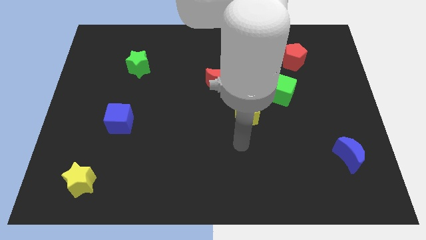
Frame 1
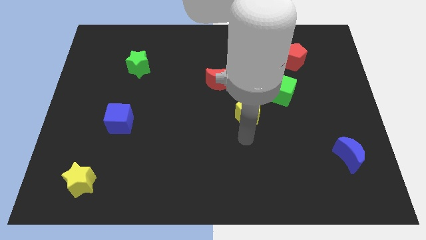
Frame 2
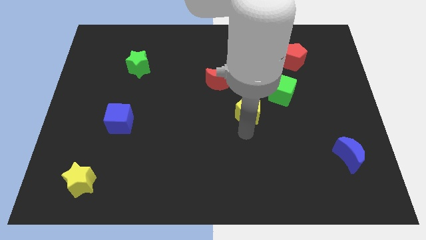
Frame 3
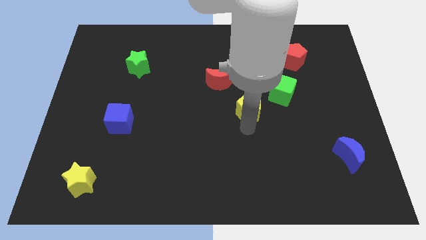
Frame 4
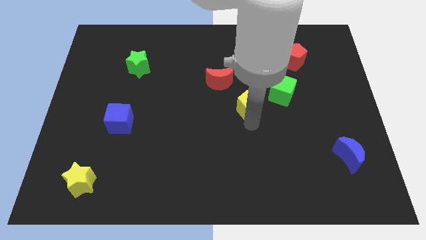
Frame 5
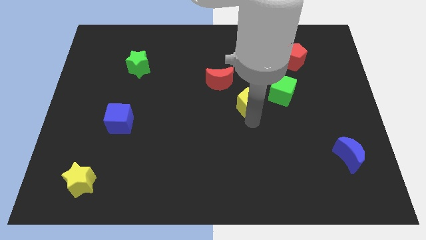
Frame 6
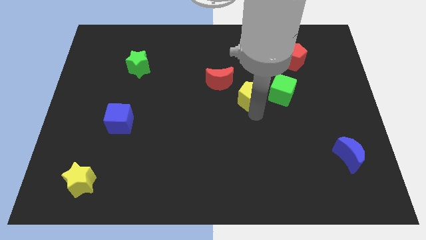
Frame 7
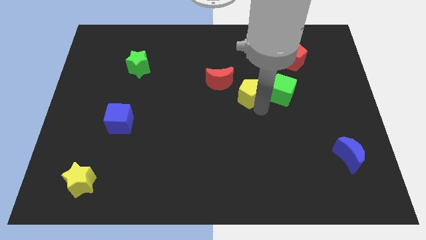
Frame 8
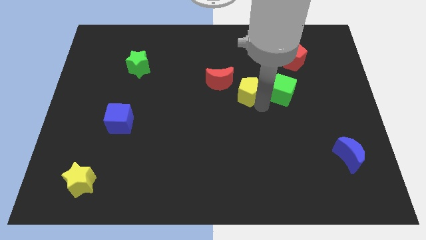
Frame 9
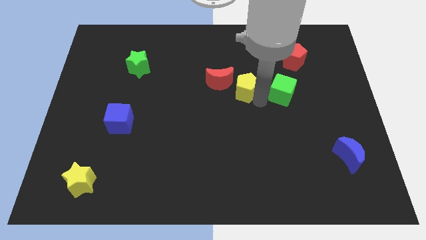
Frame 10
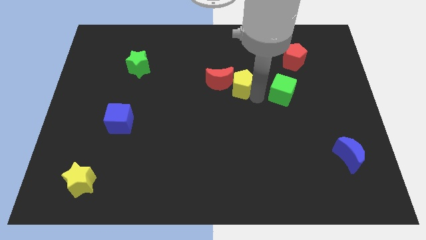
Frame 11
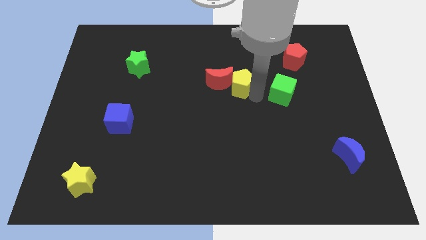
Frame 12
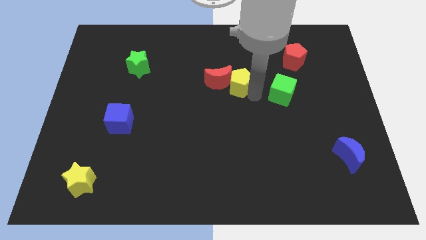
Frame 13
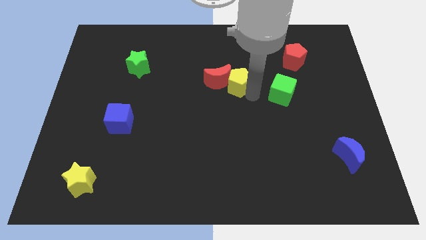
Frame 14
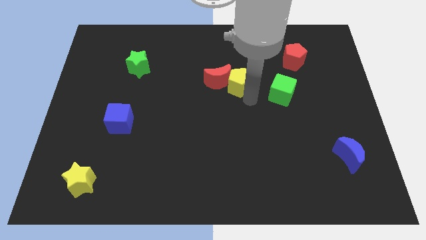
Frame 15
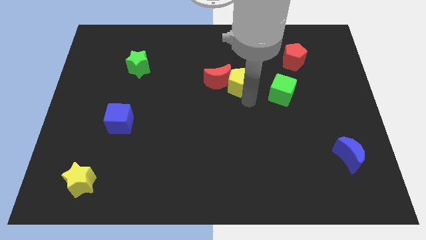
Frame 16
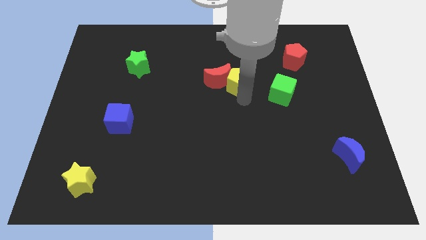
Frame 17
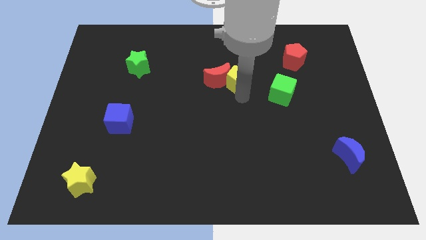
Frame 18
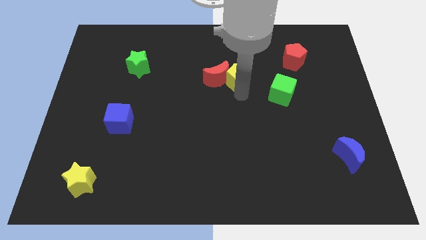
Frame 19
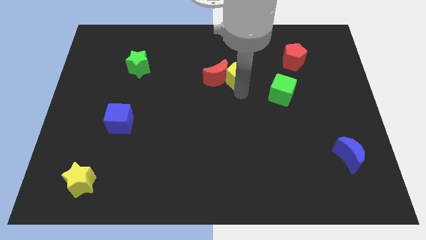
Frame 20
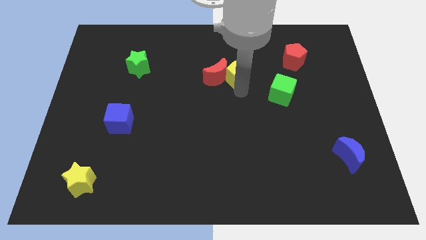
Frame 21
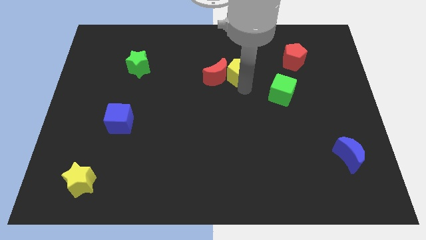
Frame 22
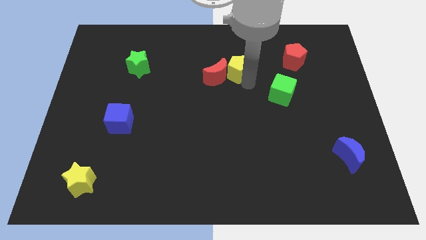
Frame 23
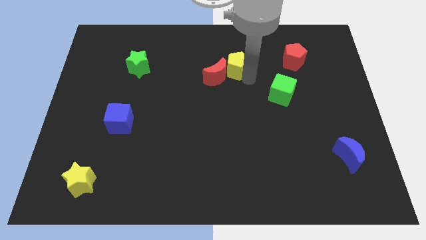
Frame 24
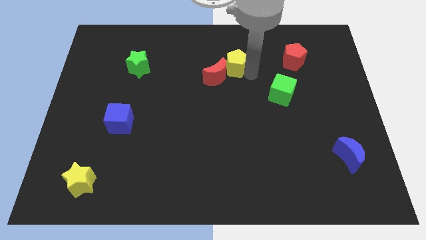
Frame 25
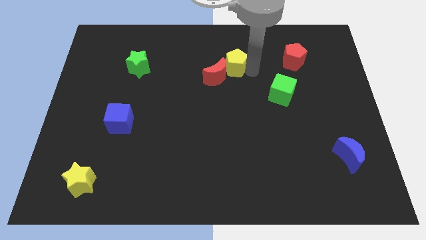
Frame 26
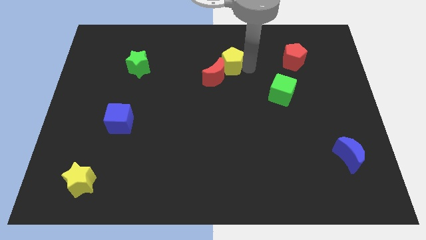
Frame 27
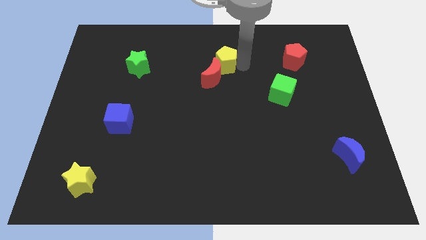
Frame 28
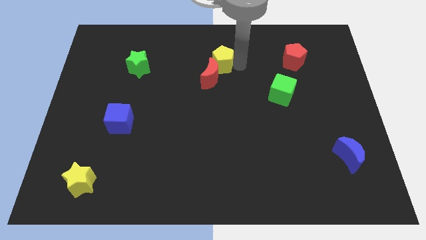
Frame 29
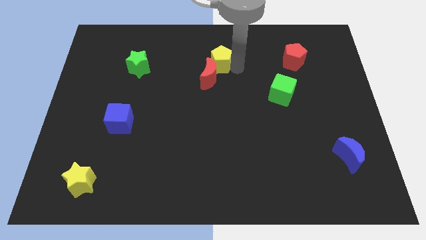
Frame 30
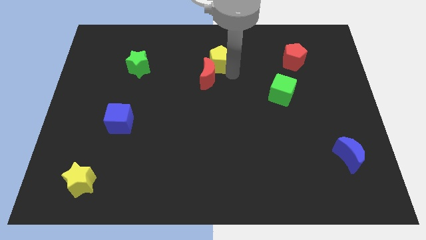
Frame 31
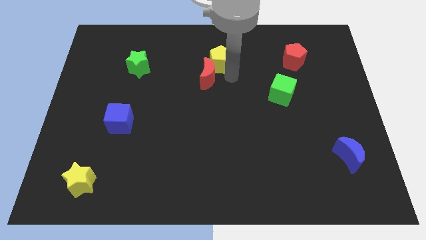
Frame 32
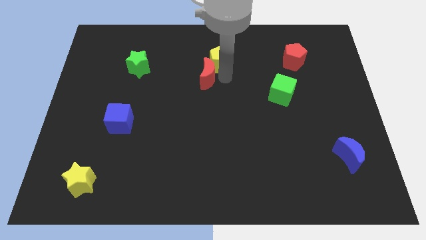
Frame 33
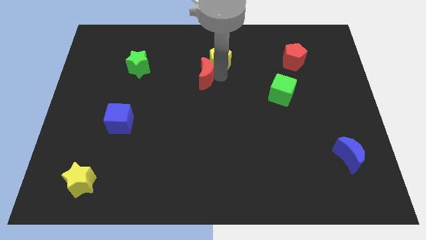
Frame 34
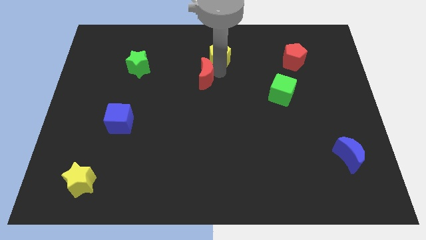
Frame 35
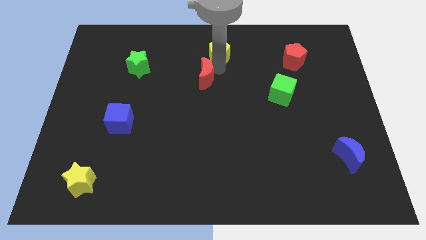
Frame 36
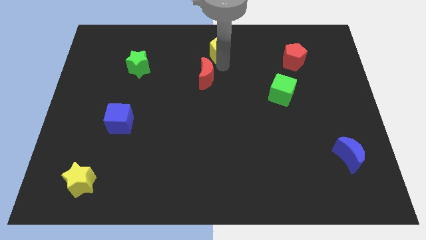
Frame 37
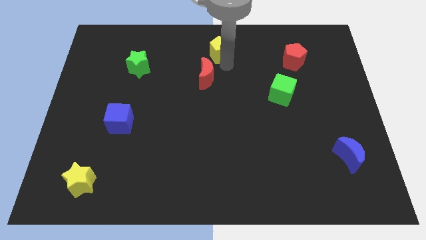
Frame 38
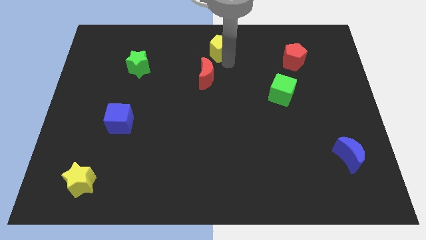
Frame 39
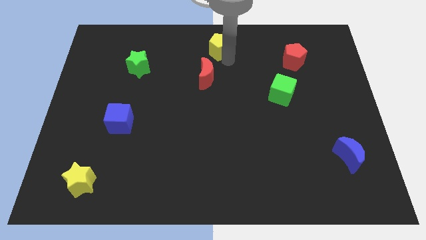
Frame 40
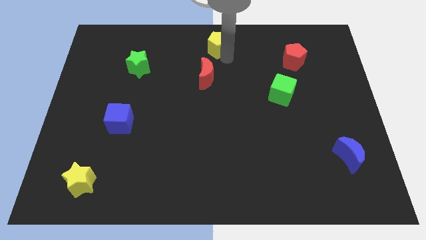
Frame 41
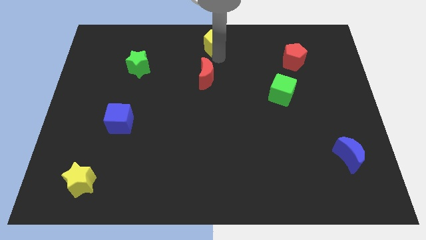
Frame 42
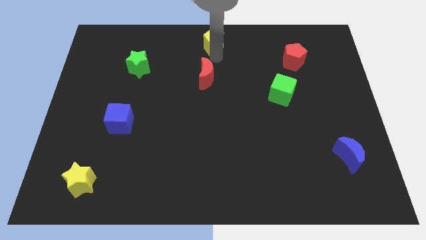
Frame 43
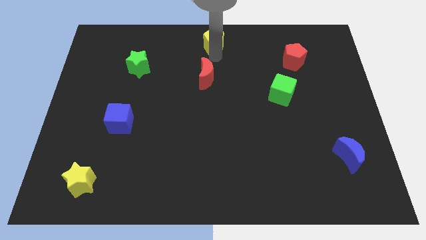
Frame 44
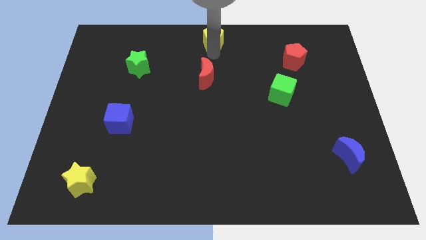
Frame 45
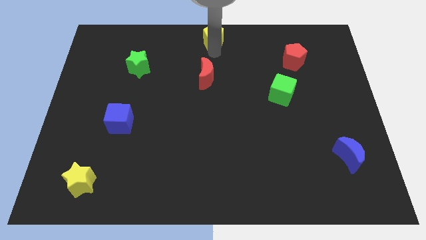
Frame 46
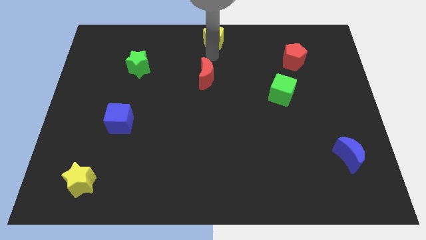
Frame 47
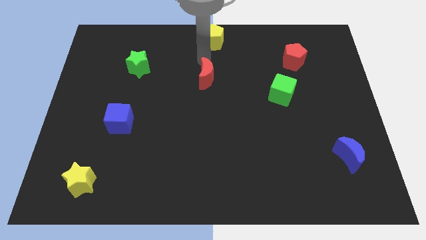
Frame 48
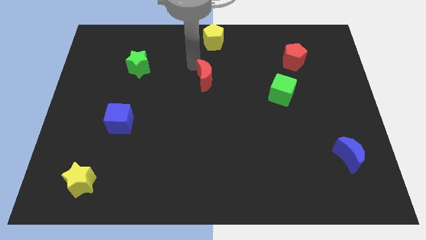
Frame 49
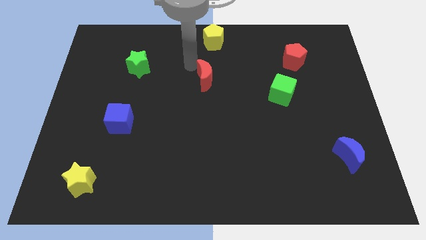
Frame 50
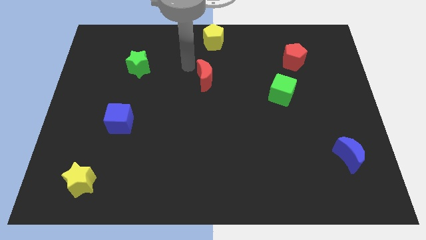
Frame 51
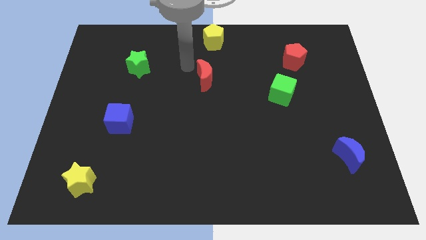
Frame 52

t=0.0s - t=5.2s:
place the yellow pentagon diagonally top left to the red pentagon

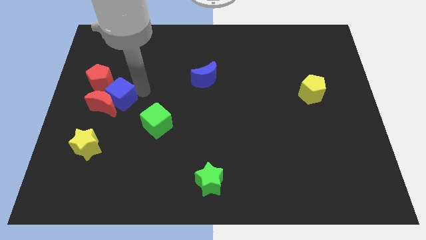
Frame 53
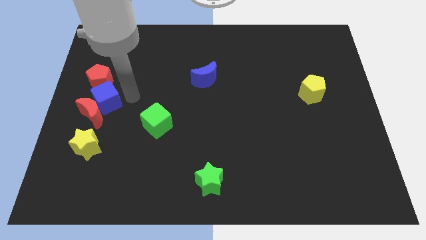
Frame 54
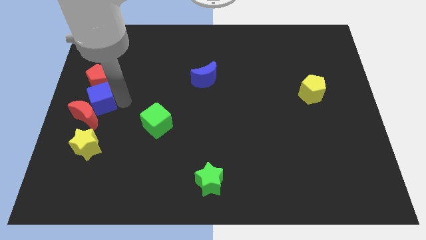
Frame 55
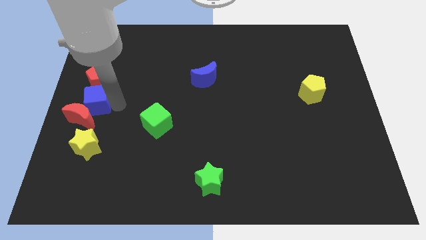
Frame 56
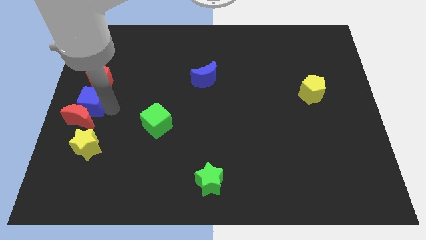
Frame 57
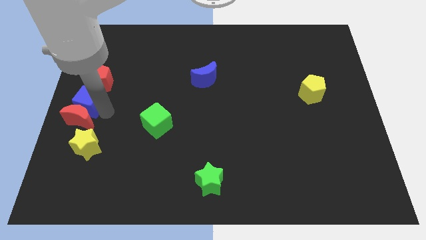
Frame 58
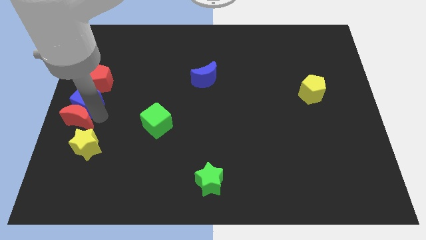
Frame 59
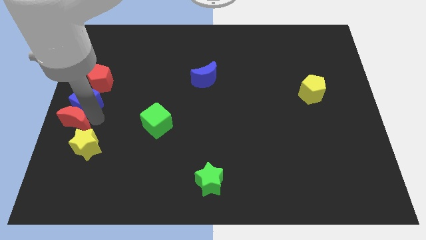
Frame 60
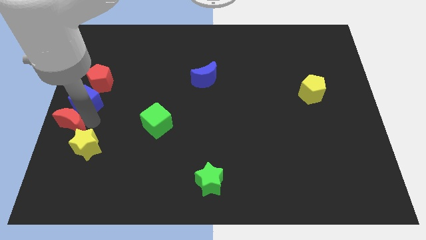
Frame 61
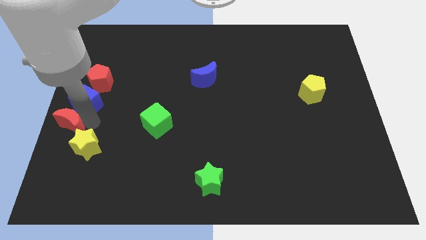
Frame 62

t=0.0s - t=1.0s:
move red moon and blue cube slightly left

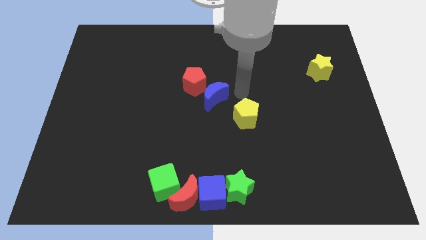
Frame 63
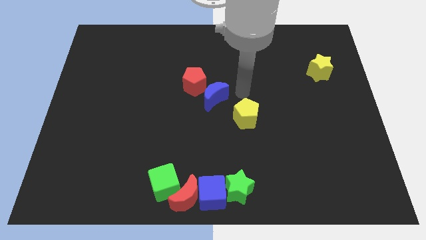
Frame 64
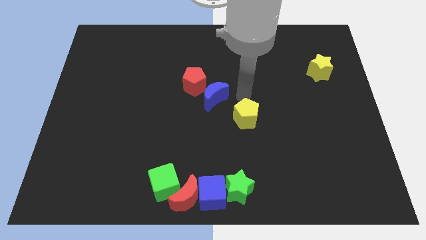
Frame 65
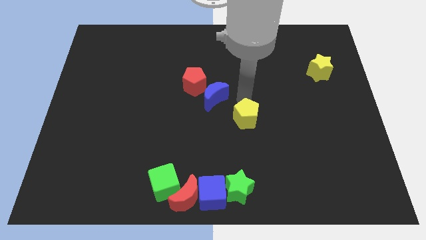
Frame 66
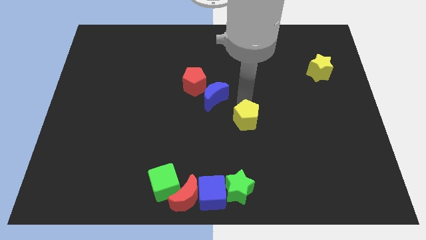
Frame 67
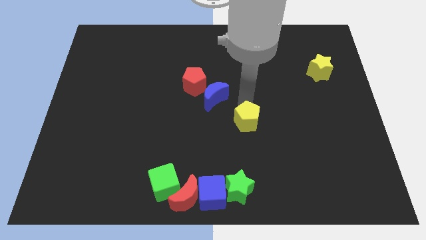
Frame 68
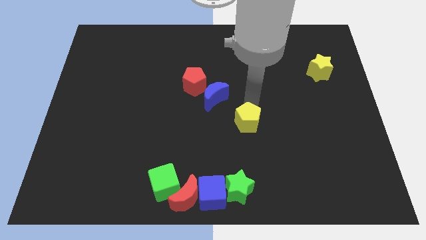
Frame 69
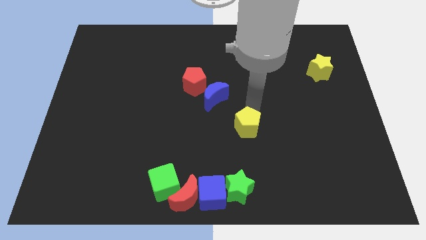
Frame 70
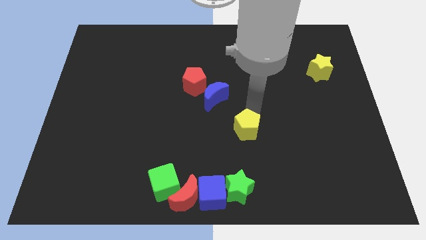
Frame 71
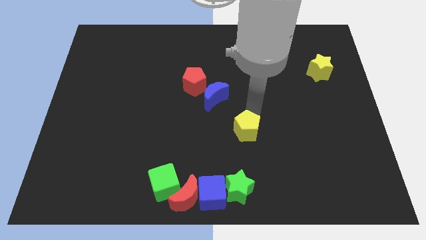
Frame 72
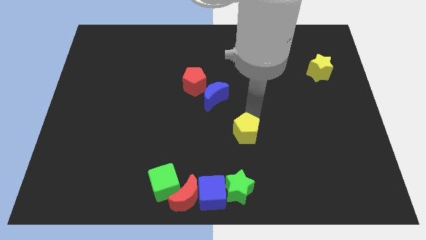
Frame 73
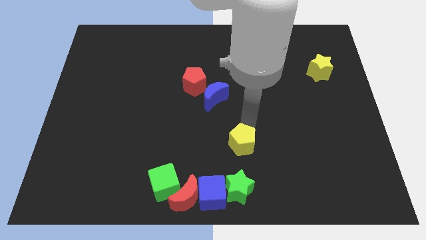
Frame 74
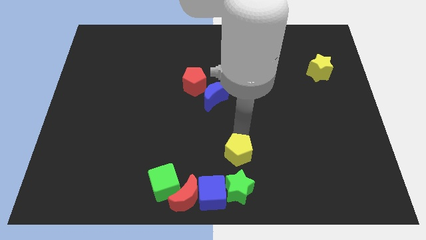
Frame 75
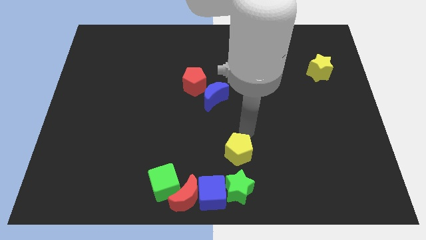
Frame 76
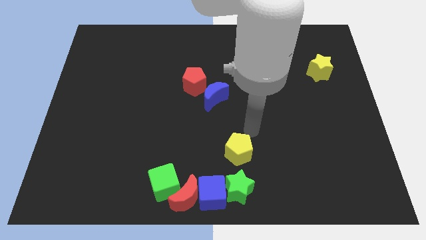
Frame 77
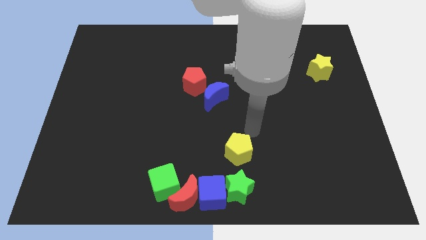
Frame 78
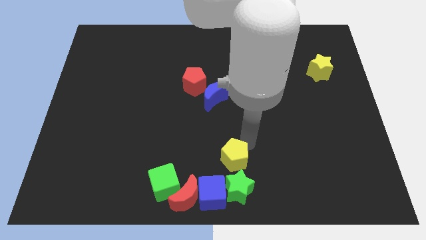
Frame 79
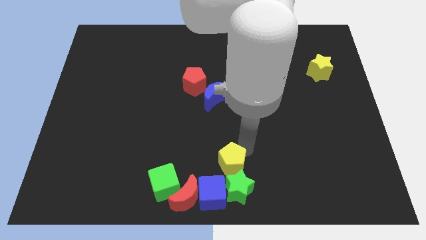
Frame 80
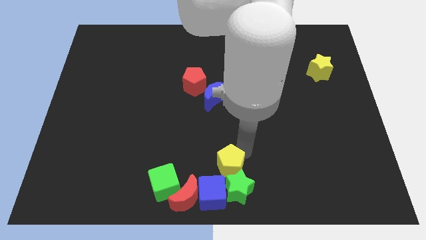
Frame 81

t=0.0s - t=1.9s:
move the yellow pentagon above the green star

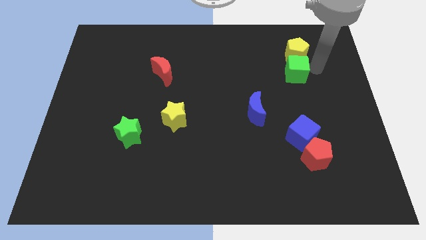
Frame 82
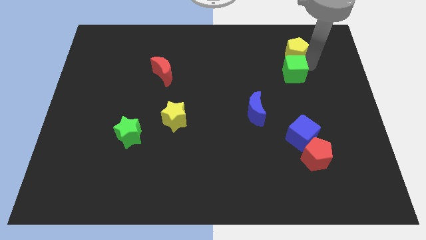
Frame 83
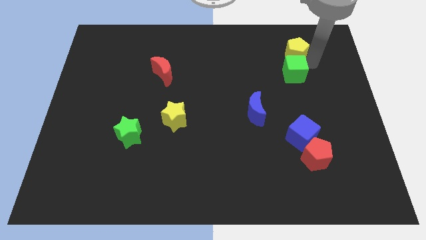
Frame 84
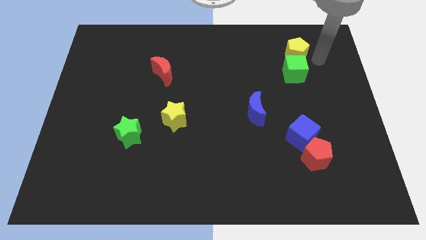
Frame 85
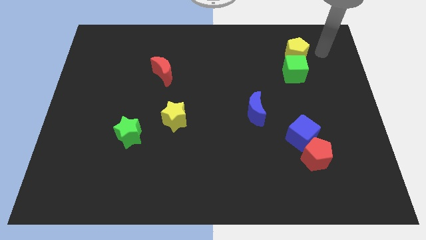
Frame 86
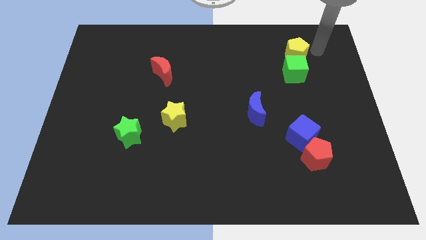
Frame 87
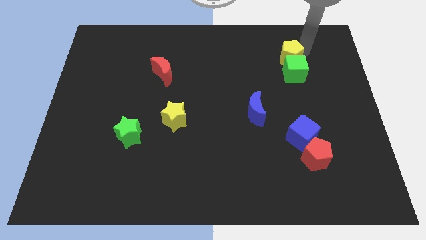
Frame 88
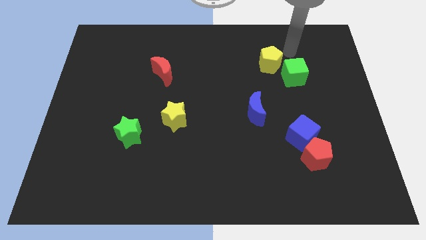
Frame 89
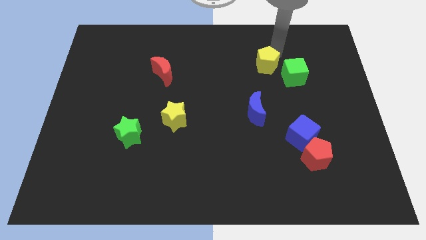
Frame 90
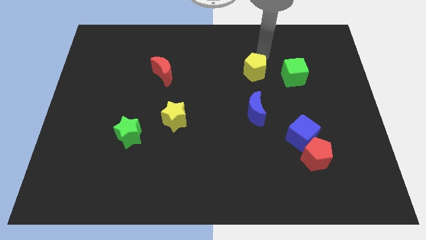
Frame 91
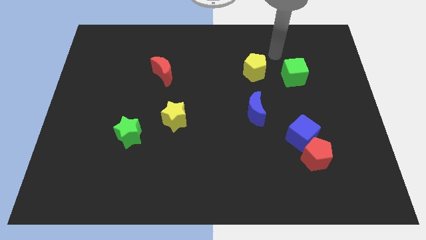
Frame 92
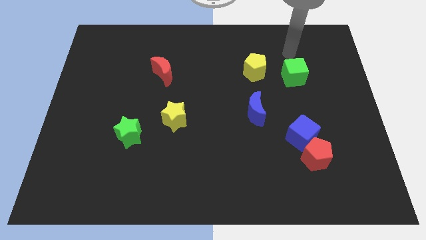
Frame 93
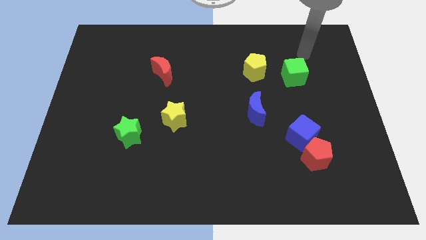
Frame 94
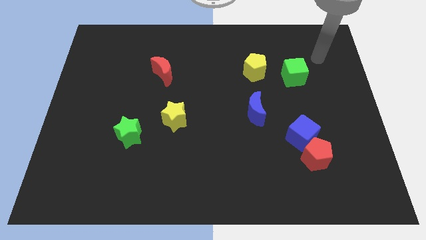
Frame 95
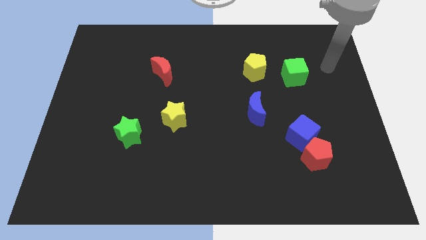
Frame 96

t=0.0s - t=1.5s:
separate the yellow pentagon and green cube
